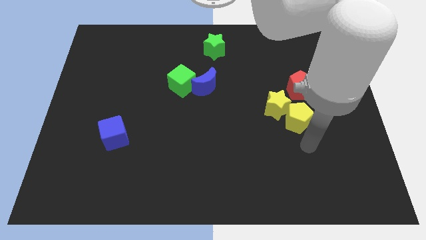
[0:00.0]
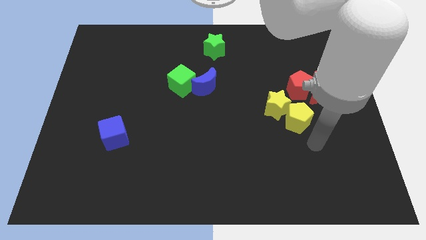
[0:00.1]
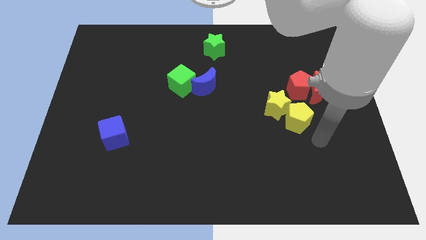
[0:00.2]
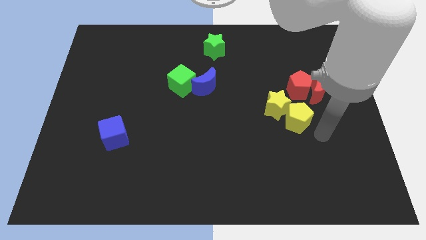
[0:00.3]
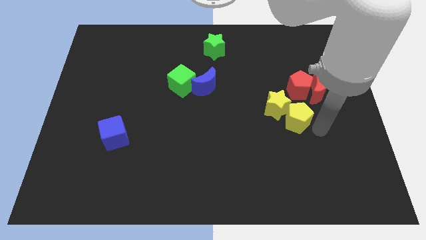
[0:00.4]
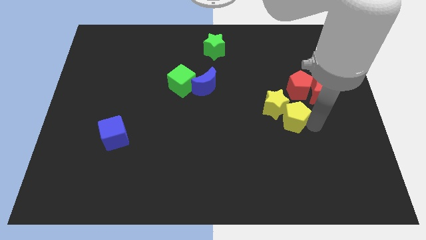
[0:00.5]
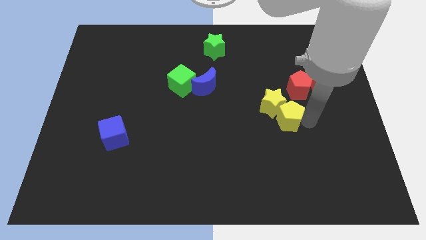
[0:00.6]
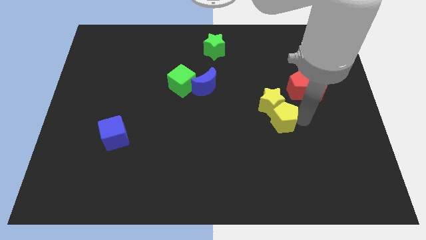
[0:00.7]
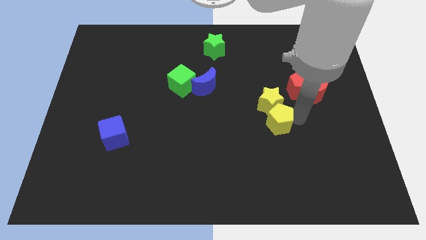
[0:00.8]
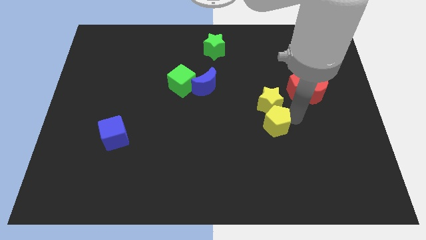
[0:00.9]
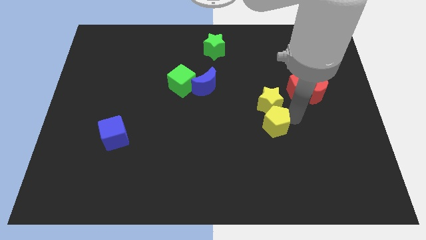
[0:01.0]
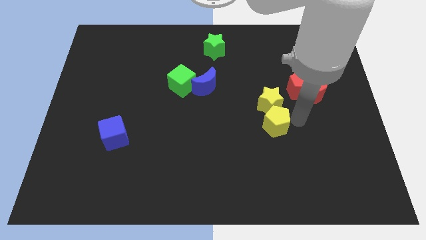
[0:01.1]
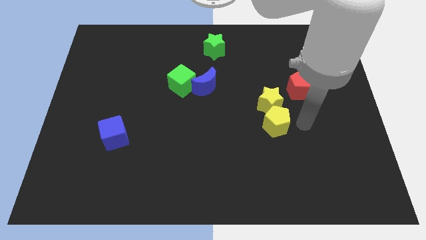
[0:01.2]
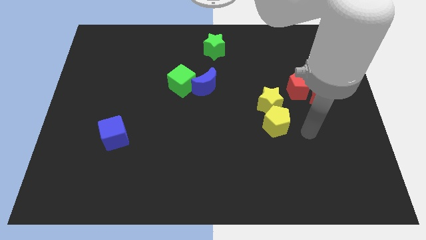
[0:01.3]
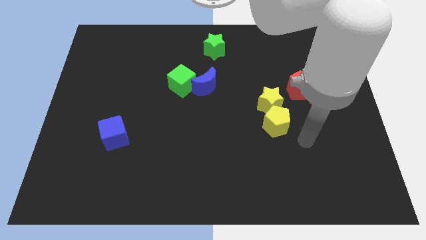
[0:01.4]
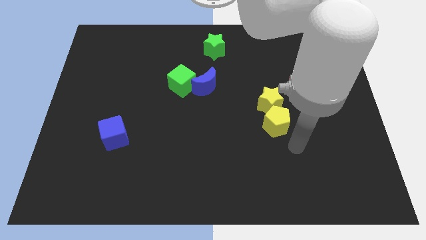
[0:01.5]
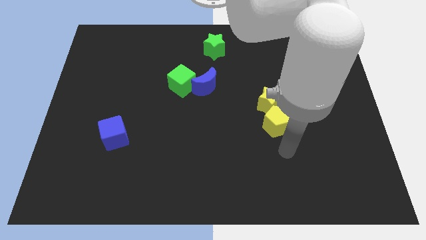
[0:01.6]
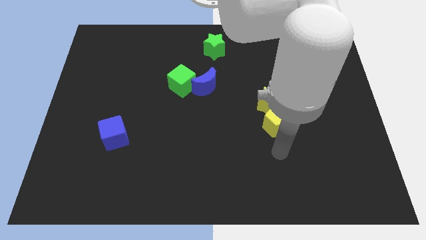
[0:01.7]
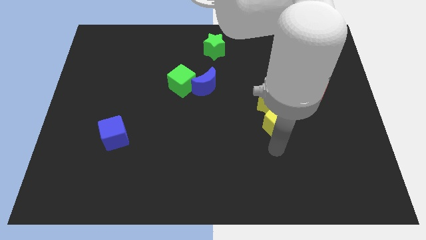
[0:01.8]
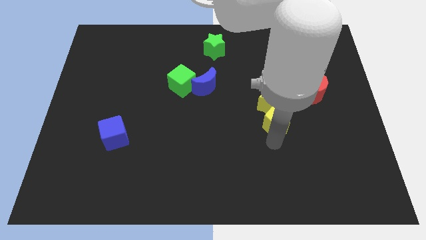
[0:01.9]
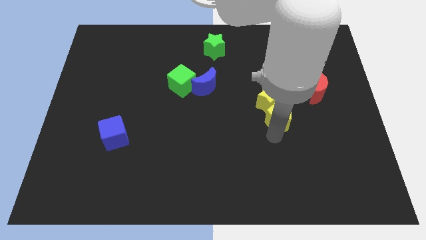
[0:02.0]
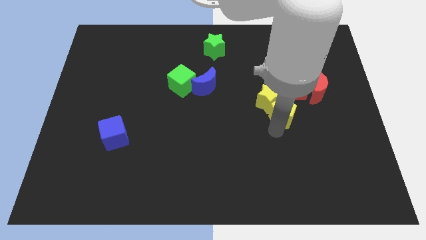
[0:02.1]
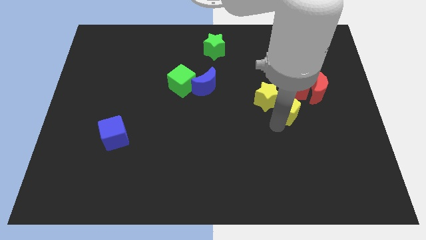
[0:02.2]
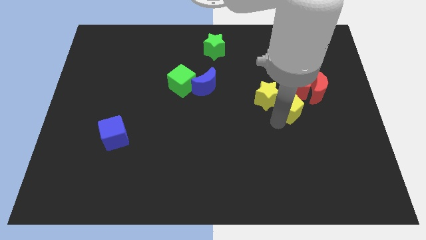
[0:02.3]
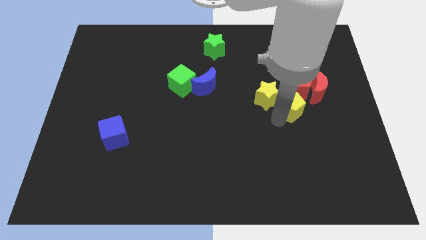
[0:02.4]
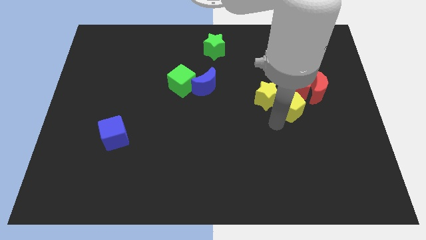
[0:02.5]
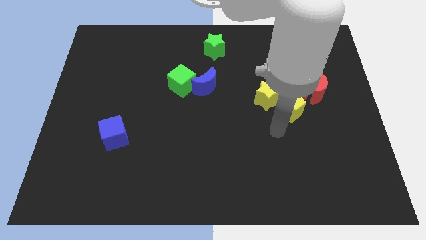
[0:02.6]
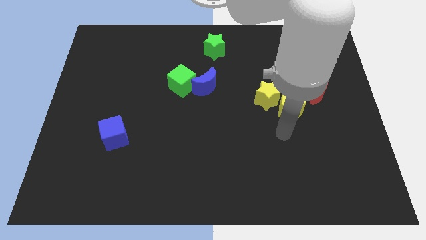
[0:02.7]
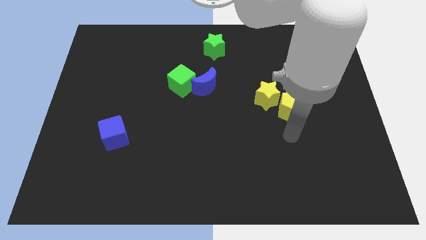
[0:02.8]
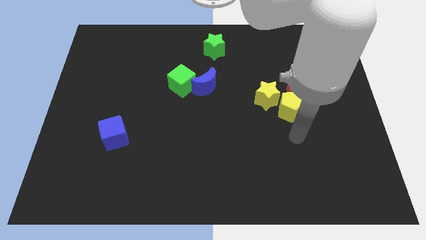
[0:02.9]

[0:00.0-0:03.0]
push the yellow pentagon below to the red pentagon

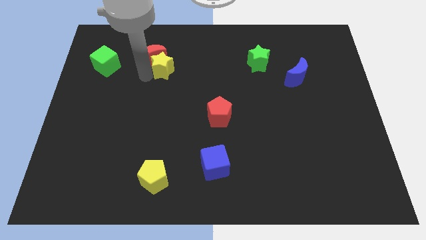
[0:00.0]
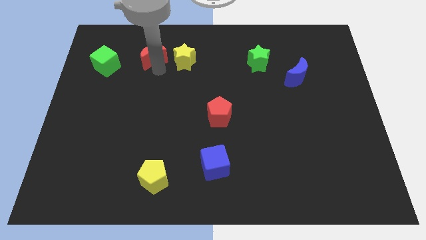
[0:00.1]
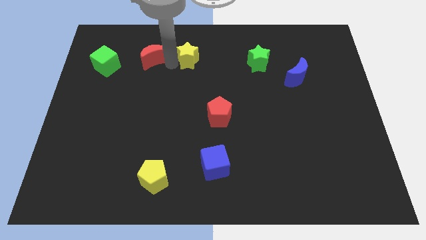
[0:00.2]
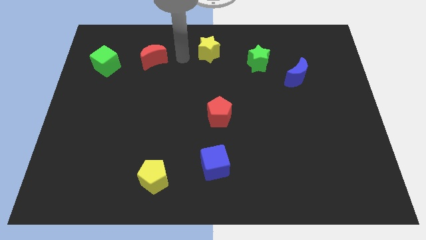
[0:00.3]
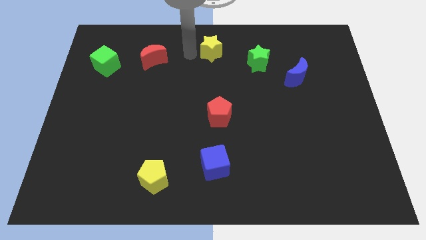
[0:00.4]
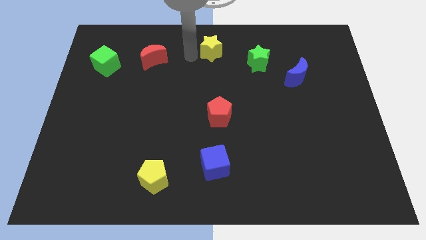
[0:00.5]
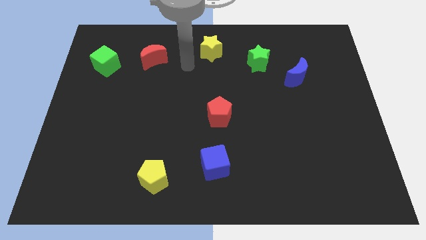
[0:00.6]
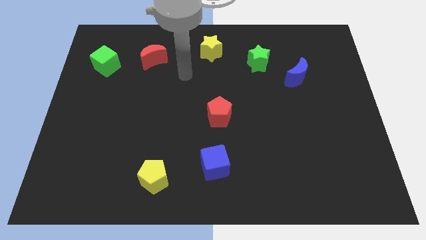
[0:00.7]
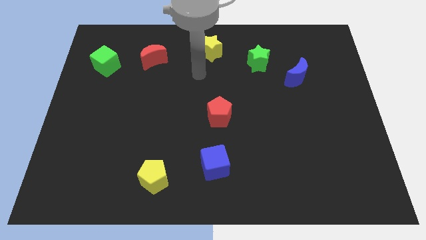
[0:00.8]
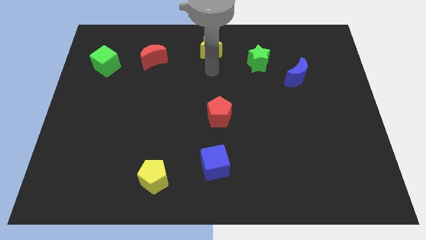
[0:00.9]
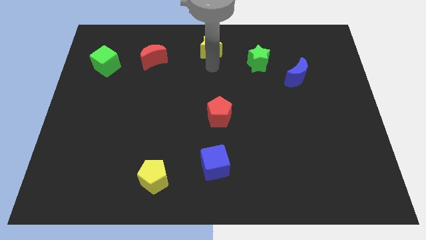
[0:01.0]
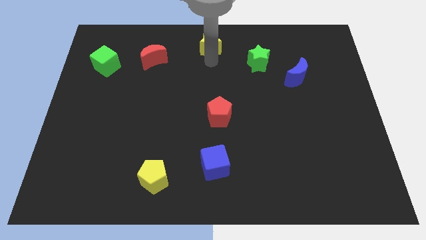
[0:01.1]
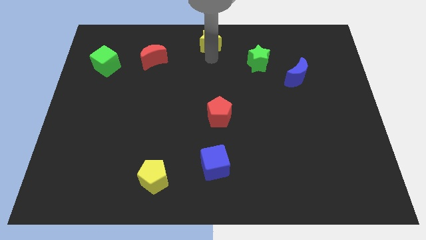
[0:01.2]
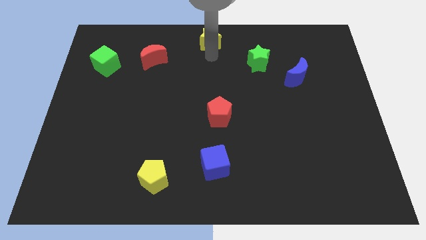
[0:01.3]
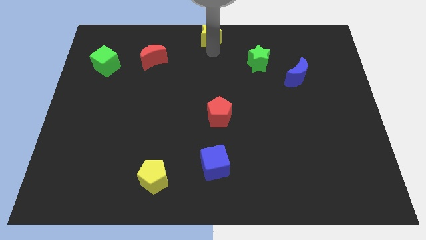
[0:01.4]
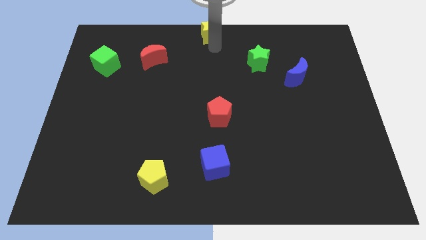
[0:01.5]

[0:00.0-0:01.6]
push the yellow star to top center of the board

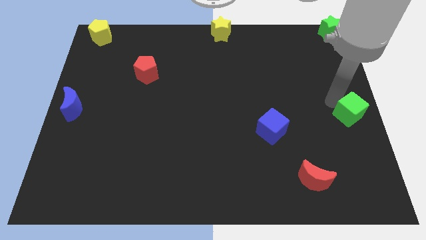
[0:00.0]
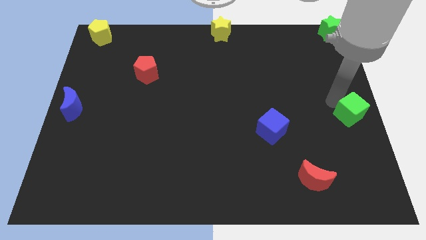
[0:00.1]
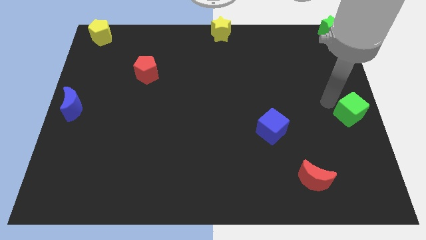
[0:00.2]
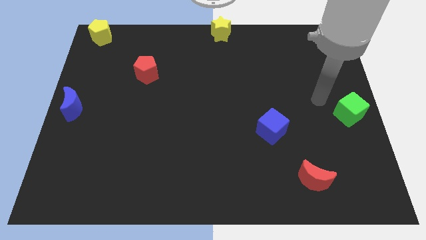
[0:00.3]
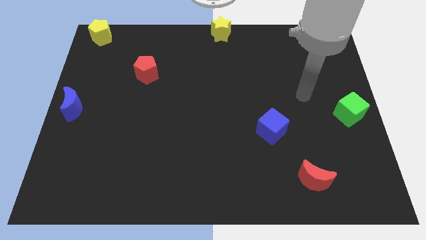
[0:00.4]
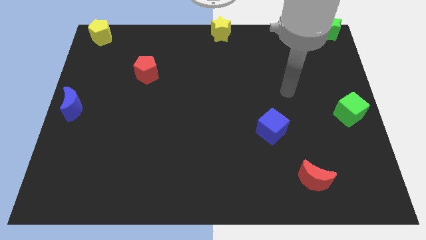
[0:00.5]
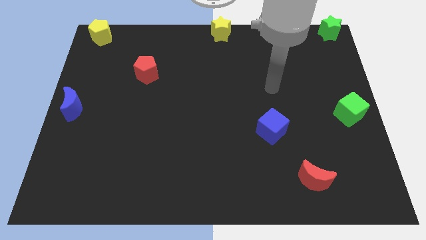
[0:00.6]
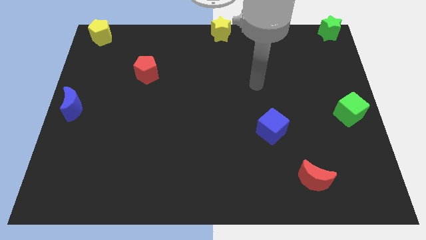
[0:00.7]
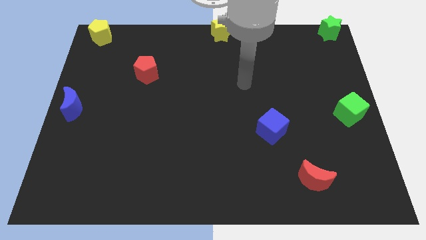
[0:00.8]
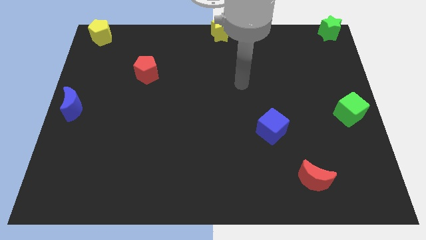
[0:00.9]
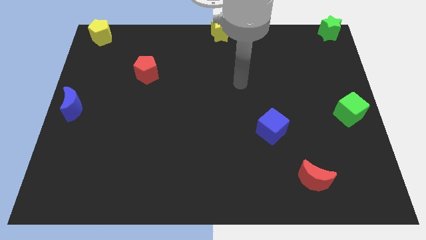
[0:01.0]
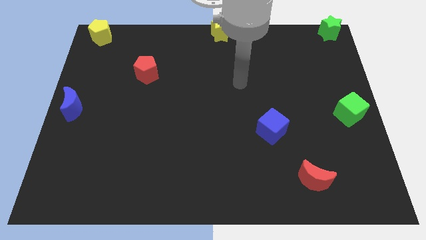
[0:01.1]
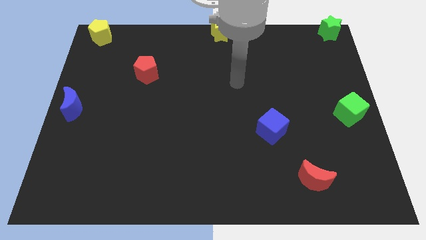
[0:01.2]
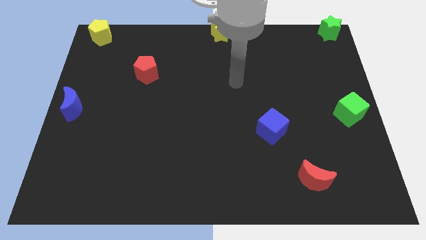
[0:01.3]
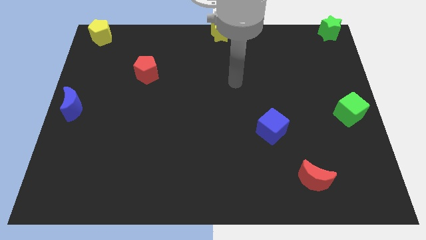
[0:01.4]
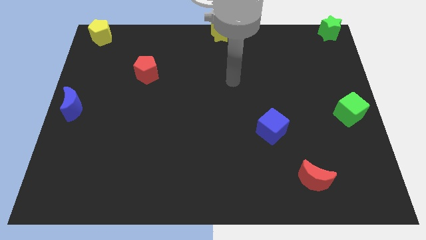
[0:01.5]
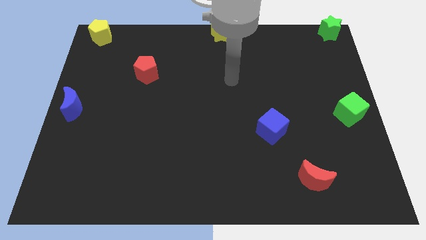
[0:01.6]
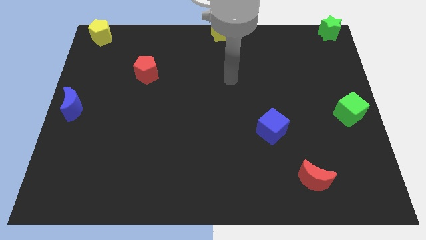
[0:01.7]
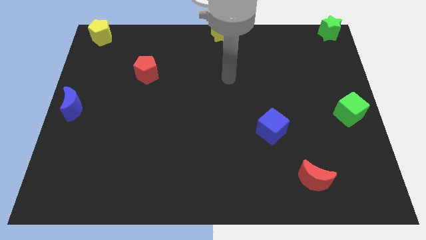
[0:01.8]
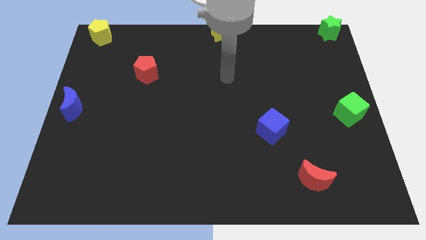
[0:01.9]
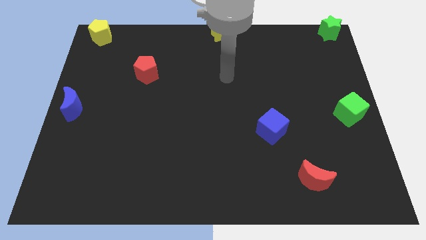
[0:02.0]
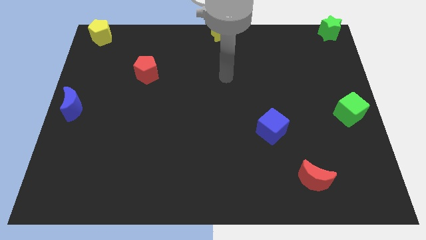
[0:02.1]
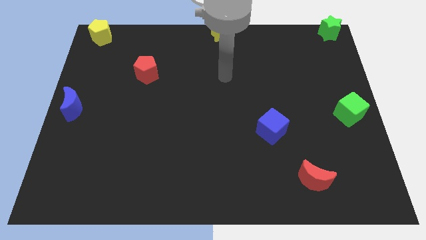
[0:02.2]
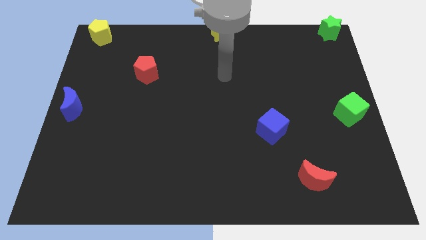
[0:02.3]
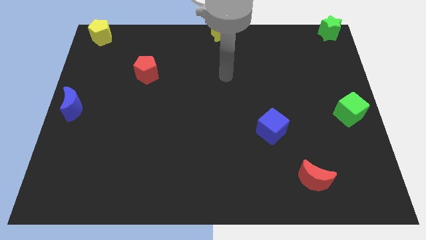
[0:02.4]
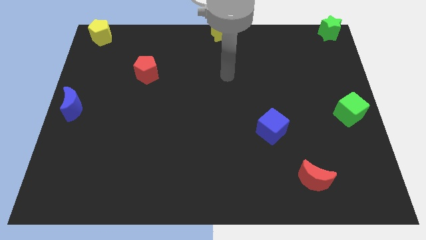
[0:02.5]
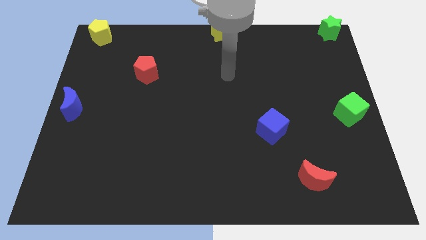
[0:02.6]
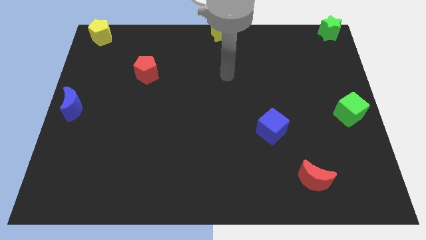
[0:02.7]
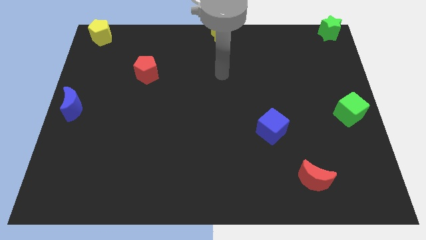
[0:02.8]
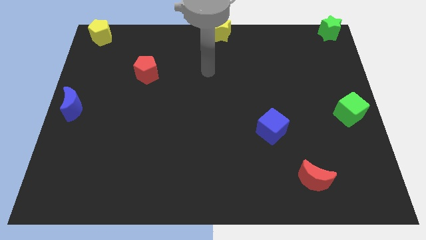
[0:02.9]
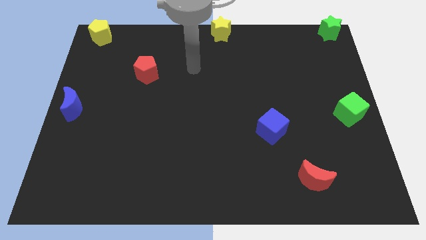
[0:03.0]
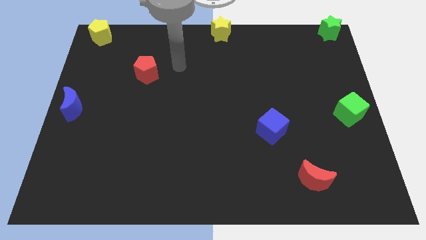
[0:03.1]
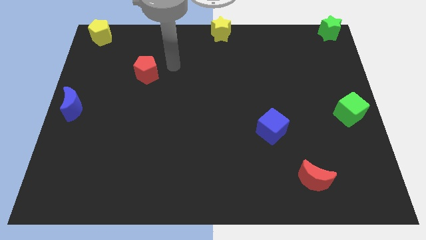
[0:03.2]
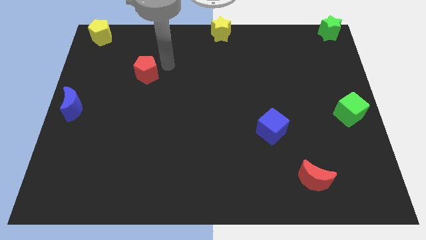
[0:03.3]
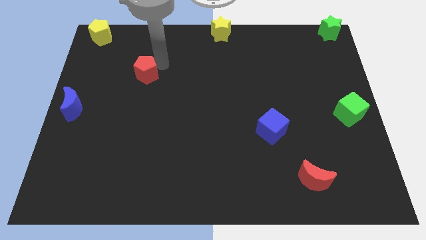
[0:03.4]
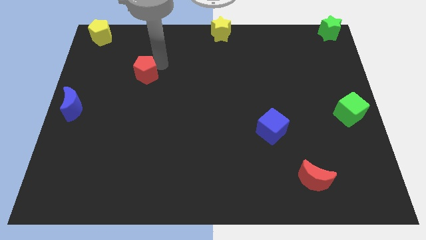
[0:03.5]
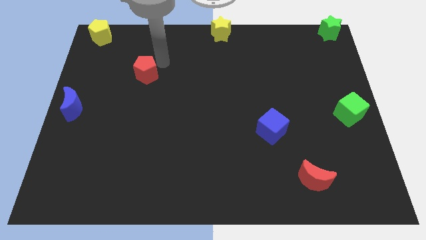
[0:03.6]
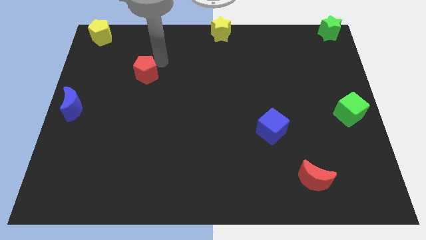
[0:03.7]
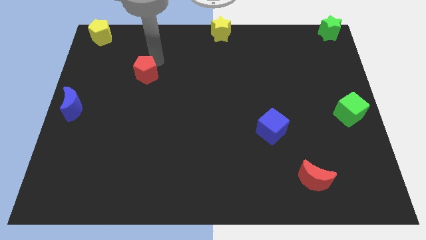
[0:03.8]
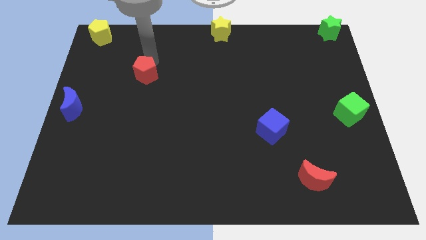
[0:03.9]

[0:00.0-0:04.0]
place the arm close to the red pentagon

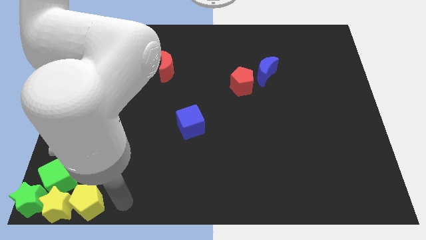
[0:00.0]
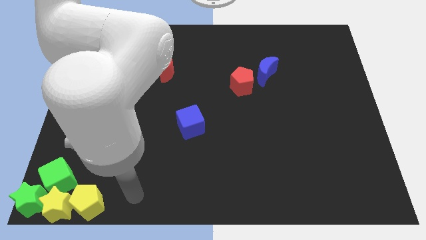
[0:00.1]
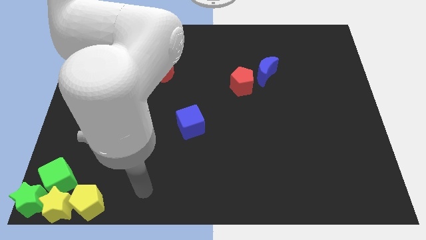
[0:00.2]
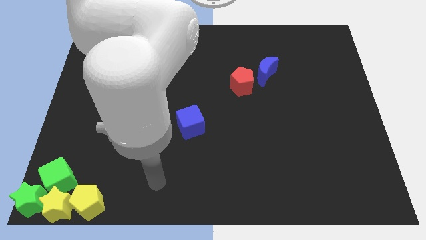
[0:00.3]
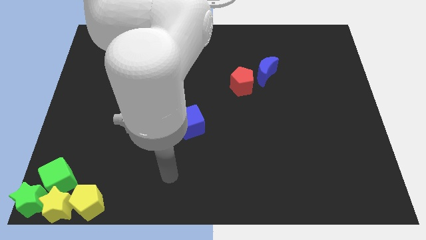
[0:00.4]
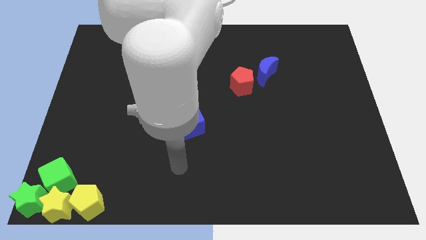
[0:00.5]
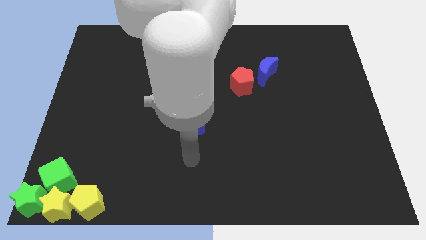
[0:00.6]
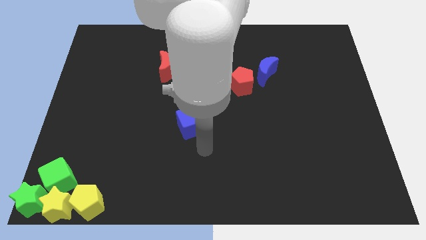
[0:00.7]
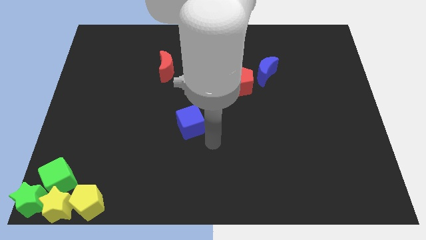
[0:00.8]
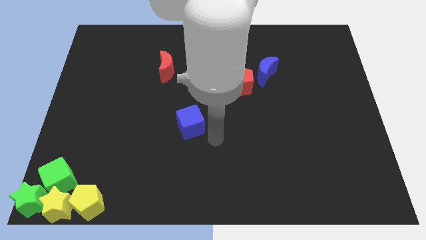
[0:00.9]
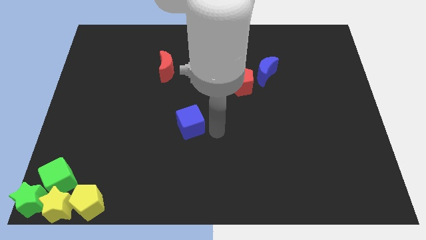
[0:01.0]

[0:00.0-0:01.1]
move your arm to the center of the board
